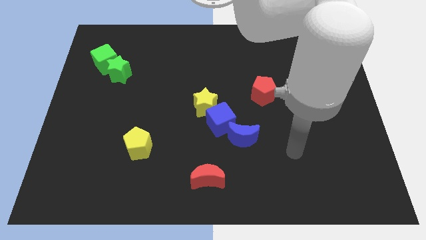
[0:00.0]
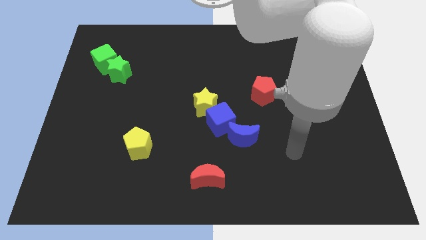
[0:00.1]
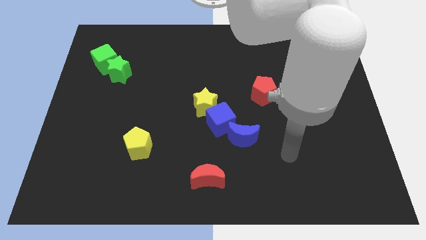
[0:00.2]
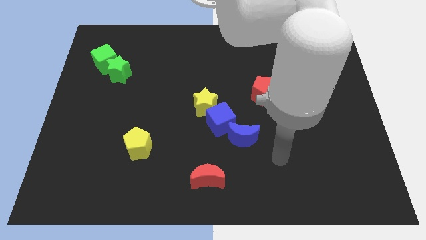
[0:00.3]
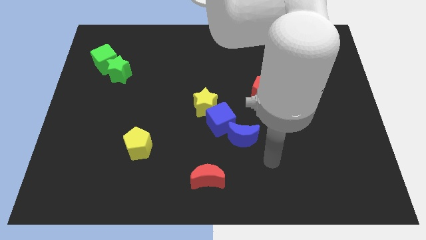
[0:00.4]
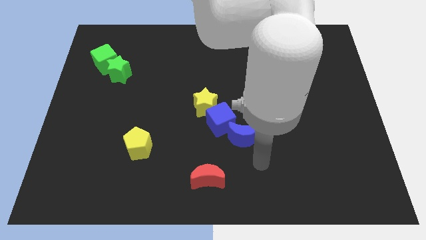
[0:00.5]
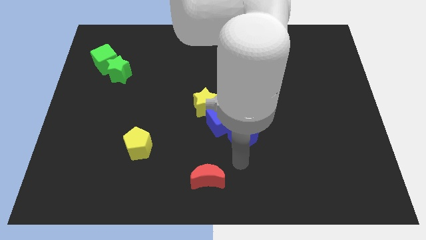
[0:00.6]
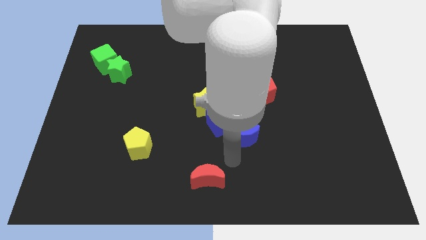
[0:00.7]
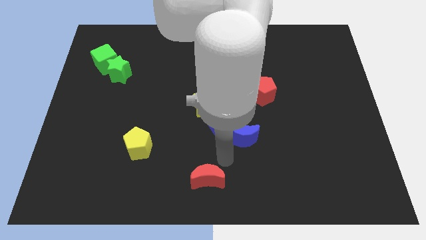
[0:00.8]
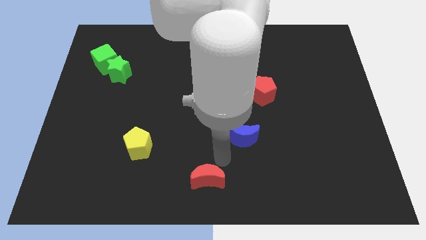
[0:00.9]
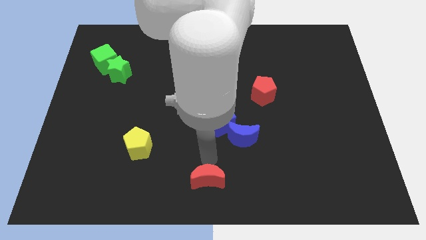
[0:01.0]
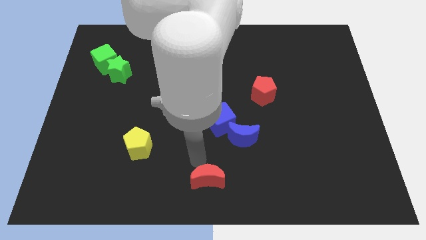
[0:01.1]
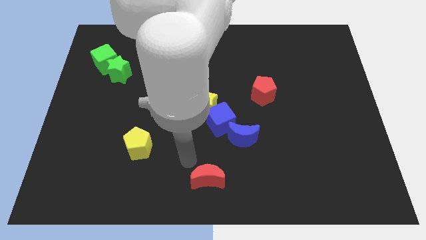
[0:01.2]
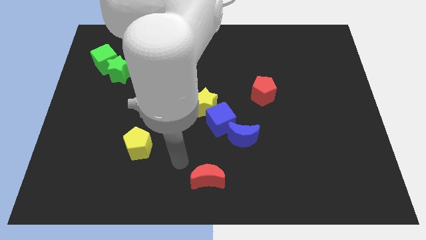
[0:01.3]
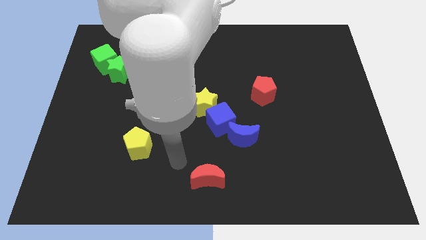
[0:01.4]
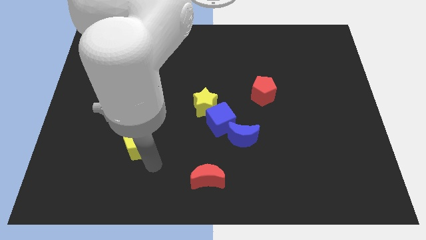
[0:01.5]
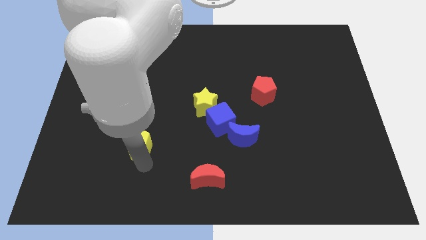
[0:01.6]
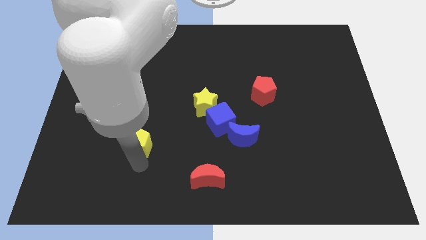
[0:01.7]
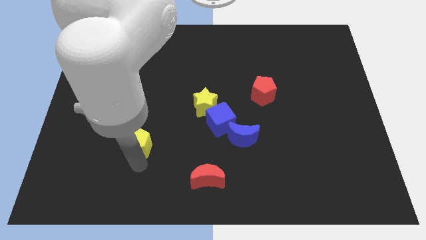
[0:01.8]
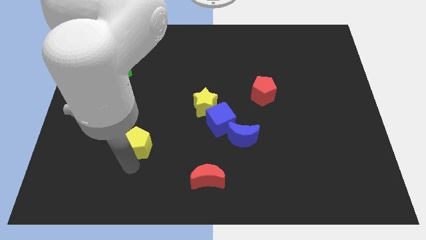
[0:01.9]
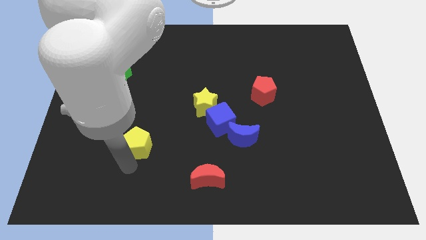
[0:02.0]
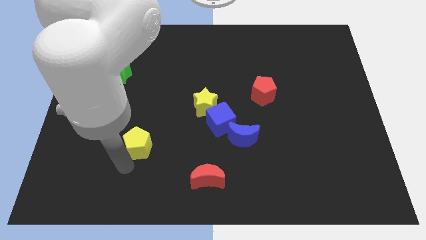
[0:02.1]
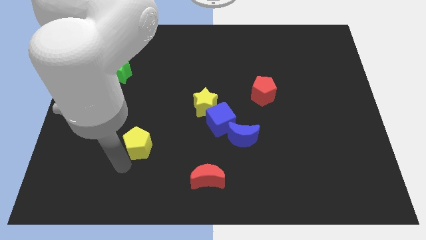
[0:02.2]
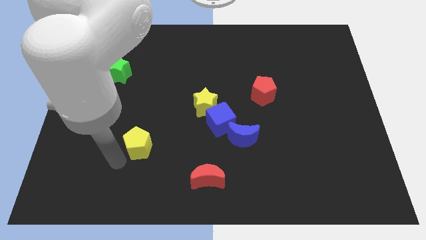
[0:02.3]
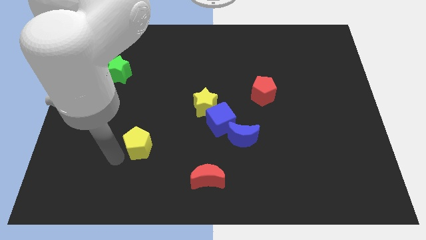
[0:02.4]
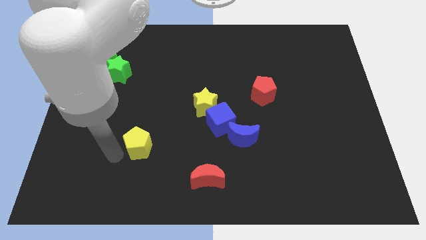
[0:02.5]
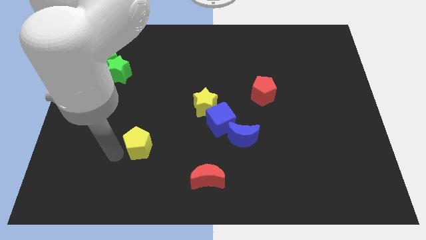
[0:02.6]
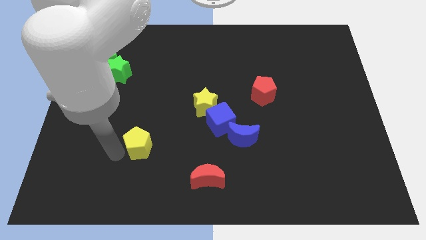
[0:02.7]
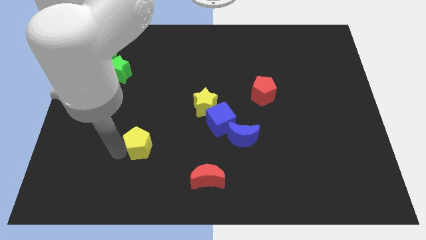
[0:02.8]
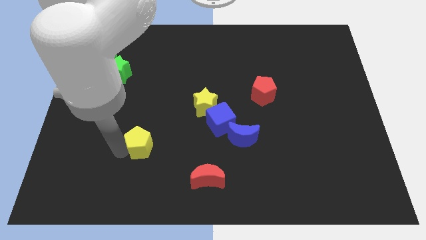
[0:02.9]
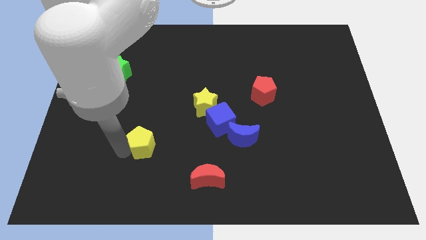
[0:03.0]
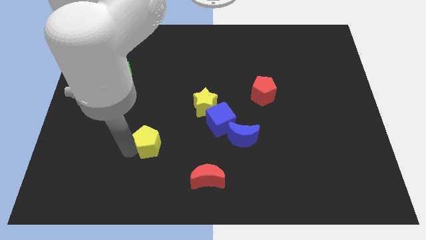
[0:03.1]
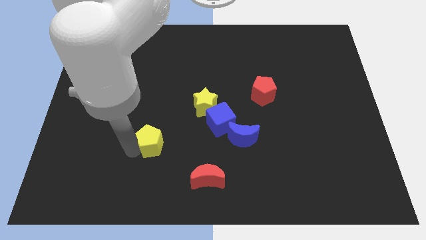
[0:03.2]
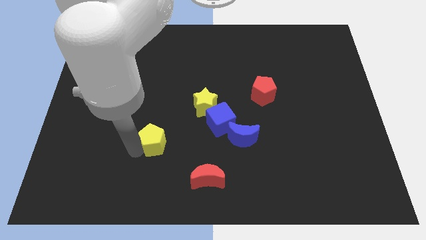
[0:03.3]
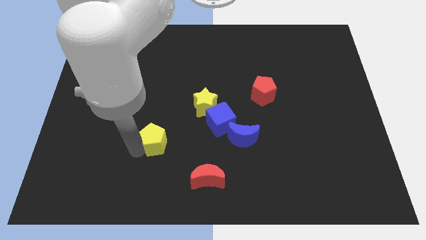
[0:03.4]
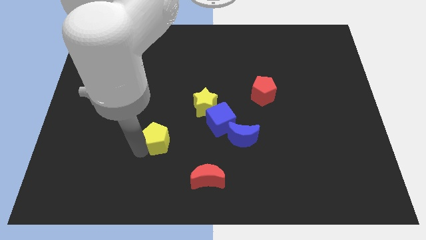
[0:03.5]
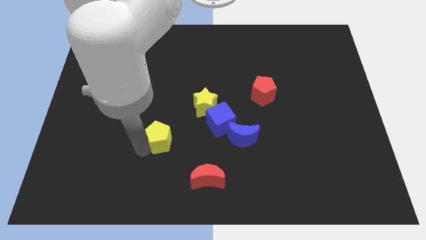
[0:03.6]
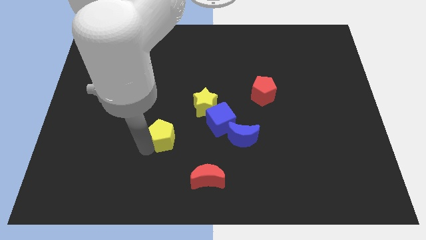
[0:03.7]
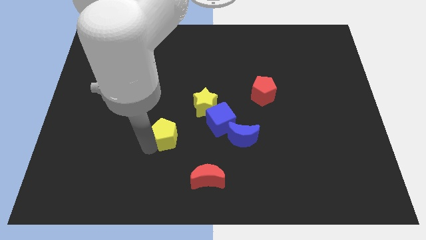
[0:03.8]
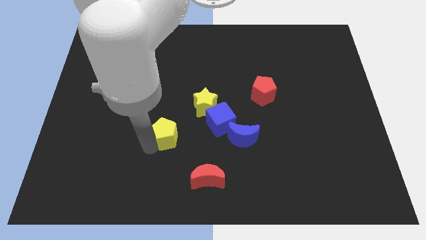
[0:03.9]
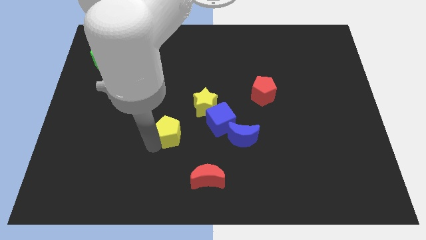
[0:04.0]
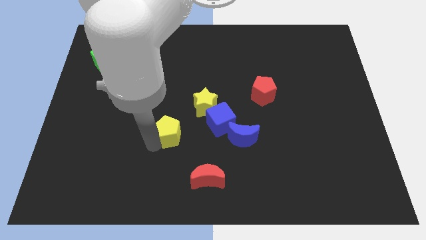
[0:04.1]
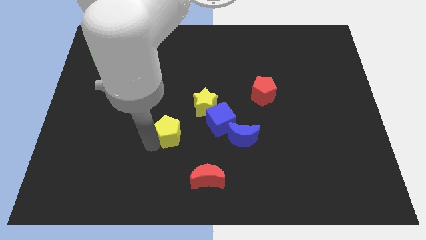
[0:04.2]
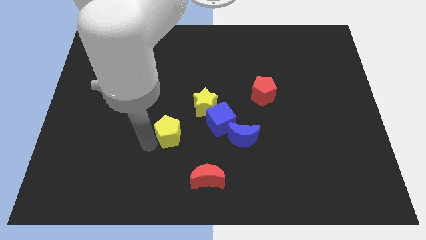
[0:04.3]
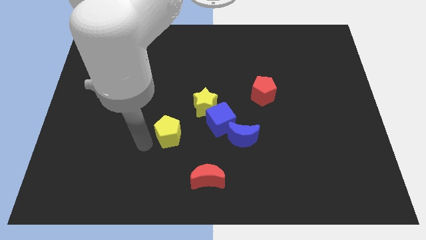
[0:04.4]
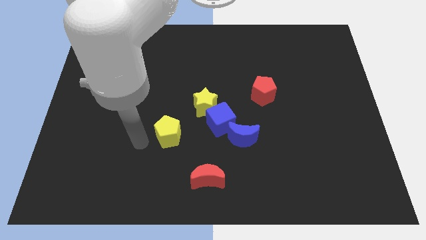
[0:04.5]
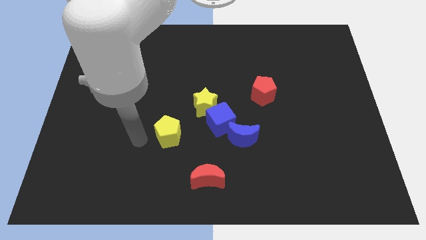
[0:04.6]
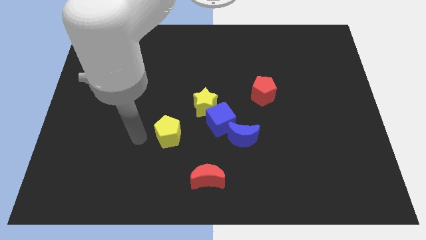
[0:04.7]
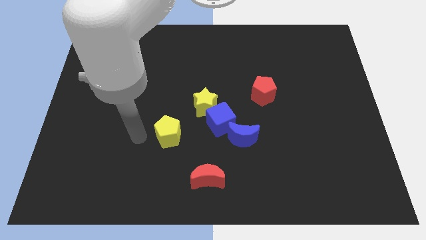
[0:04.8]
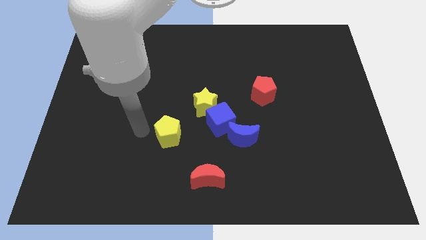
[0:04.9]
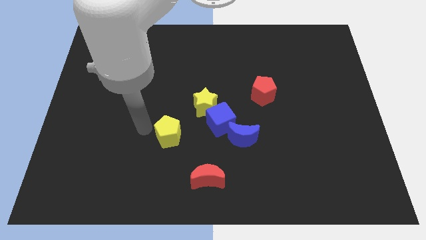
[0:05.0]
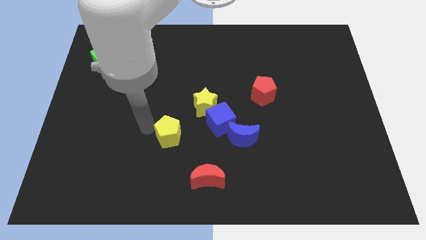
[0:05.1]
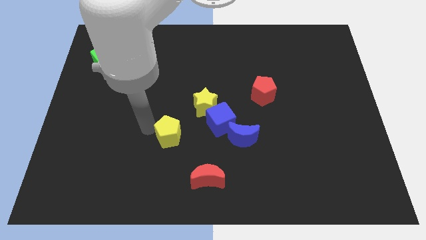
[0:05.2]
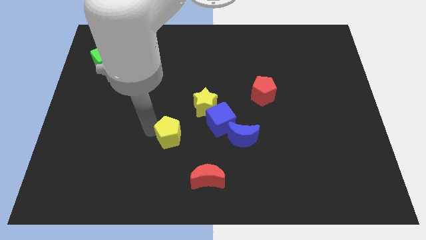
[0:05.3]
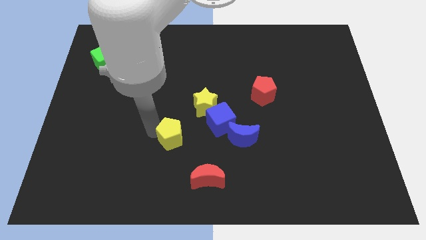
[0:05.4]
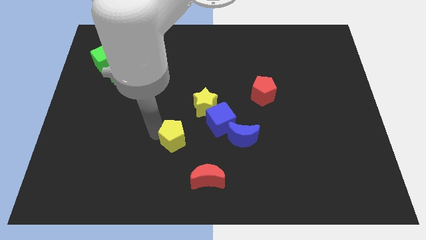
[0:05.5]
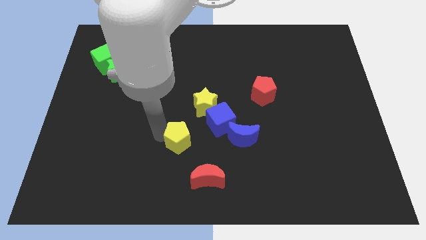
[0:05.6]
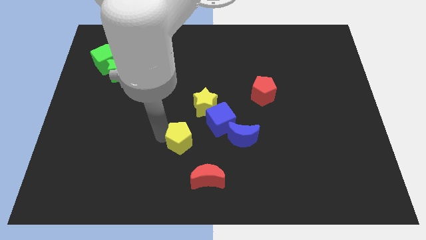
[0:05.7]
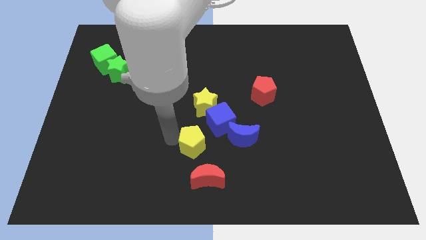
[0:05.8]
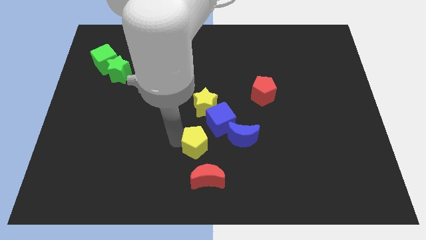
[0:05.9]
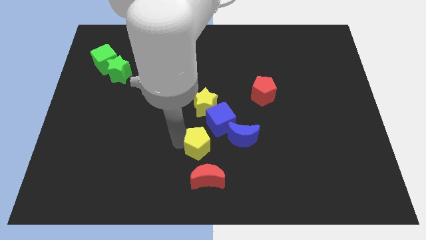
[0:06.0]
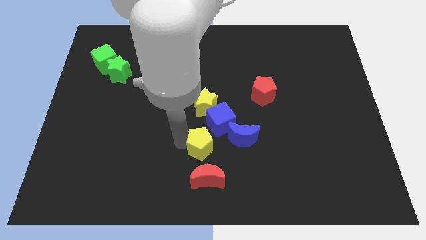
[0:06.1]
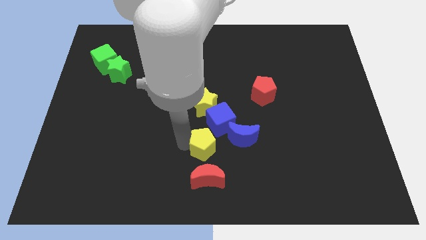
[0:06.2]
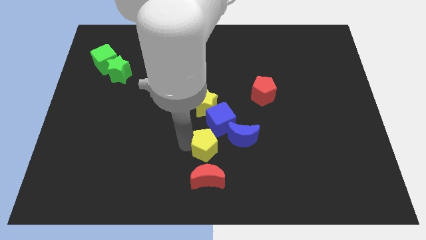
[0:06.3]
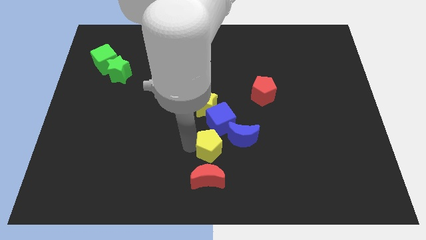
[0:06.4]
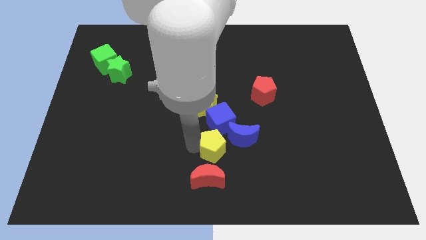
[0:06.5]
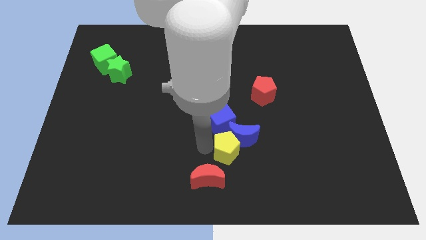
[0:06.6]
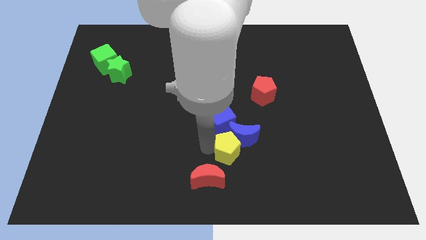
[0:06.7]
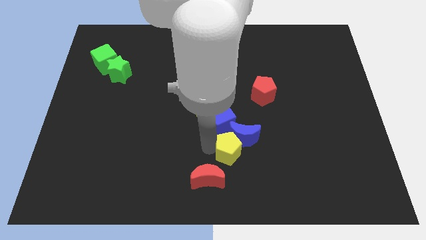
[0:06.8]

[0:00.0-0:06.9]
move the yellow pentagon to the blue moon

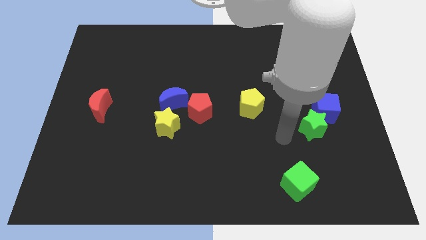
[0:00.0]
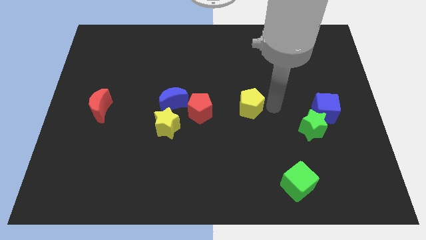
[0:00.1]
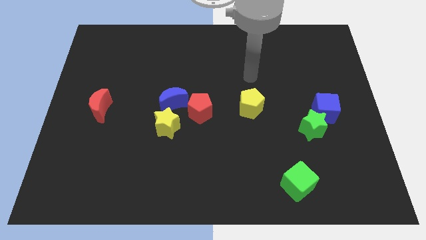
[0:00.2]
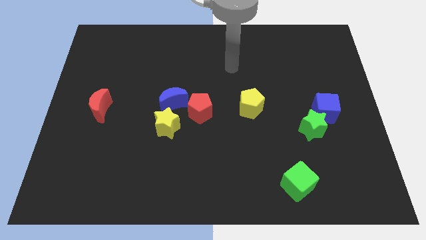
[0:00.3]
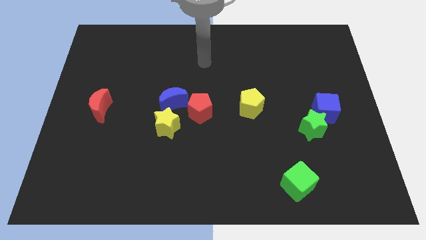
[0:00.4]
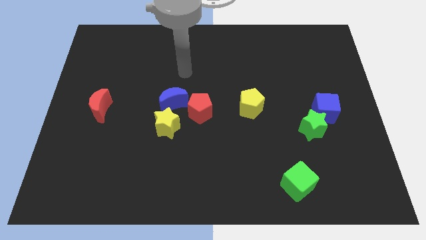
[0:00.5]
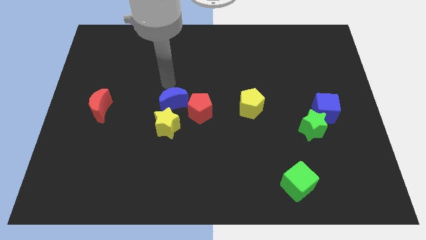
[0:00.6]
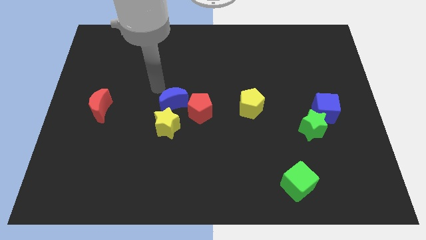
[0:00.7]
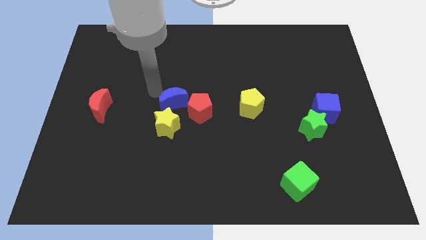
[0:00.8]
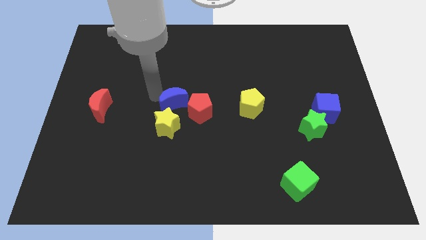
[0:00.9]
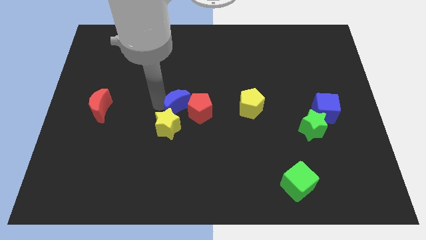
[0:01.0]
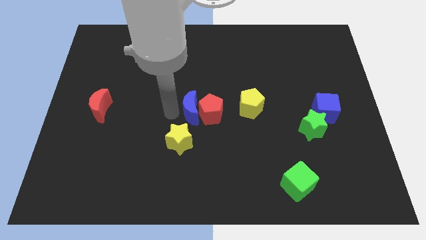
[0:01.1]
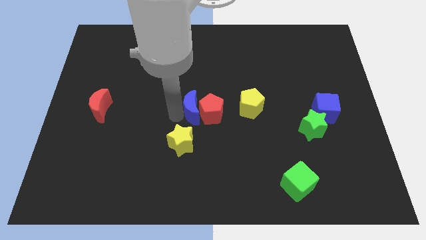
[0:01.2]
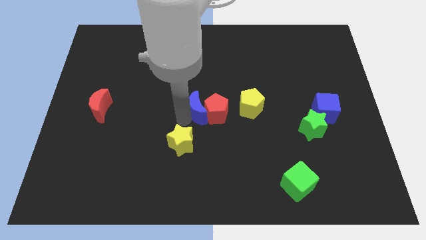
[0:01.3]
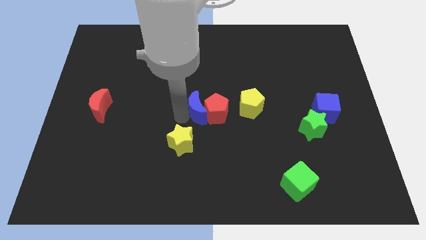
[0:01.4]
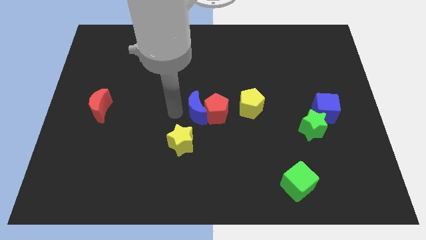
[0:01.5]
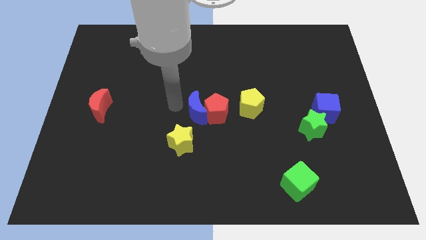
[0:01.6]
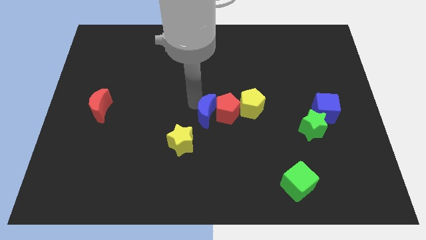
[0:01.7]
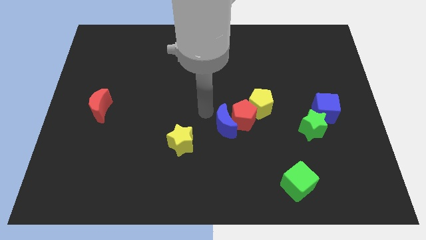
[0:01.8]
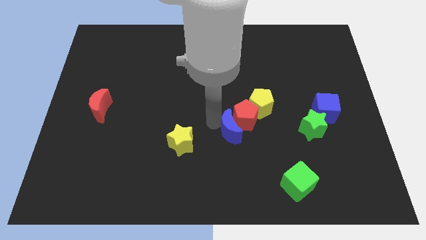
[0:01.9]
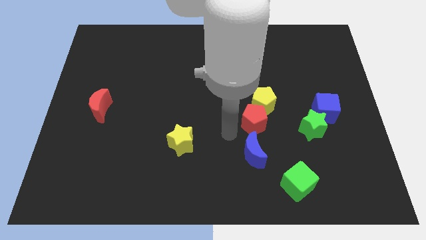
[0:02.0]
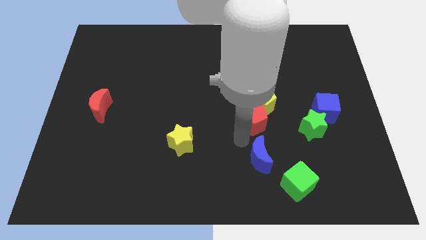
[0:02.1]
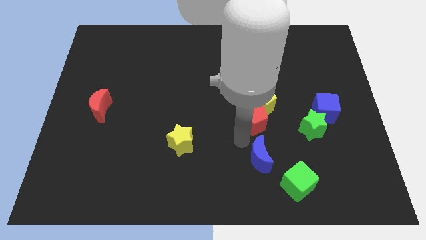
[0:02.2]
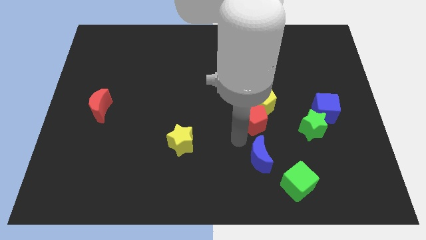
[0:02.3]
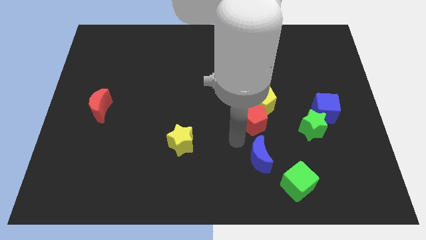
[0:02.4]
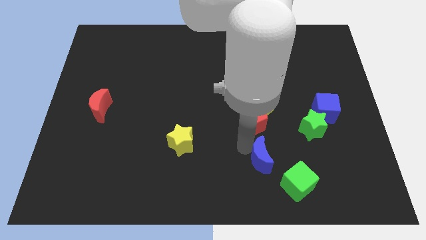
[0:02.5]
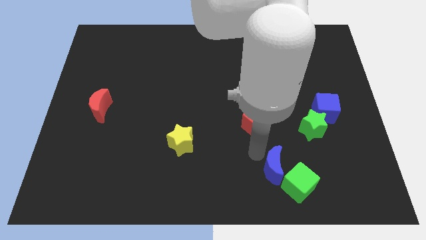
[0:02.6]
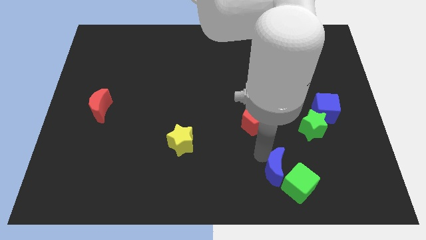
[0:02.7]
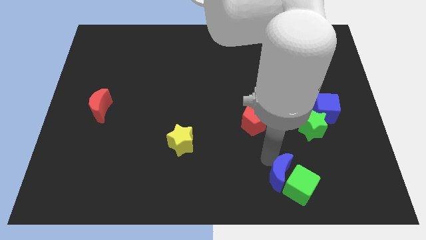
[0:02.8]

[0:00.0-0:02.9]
put the blue moon close to the green cube
